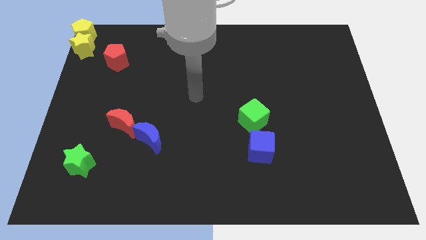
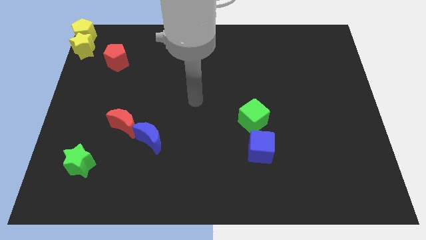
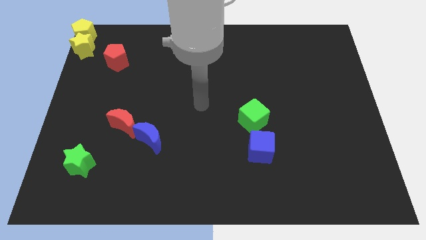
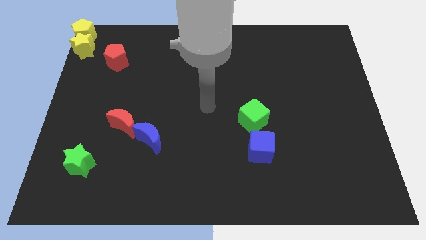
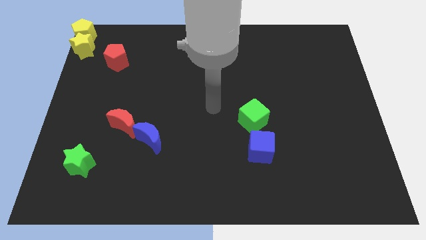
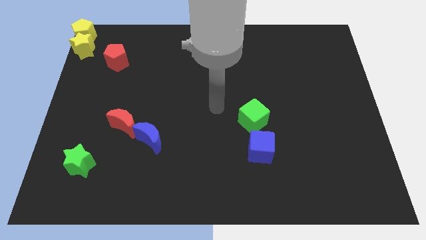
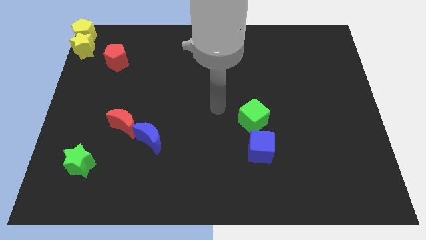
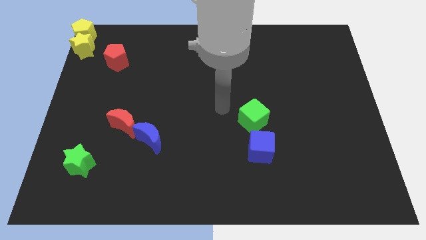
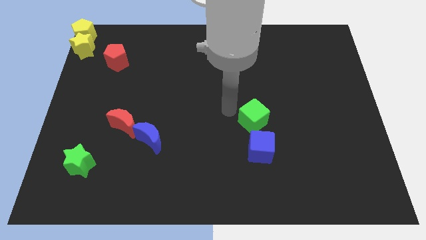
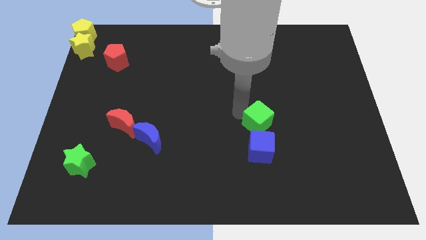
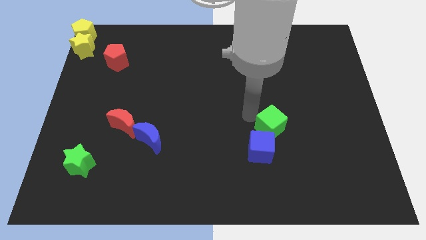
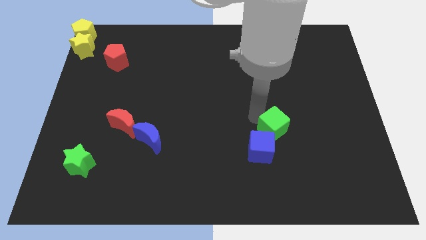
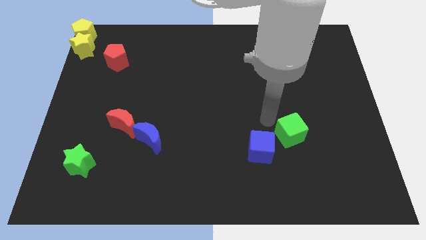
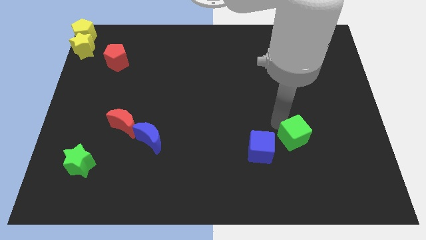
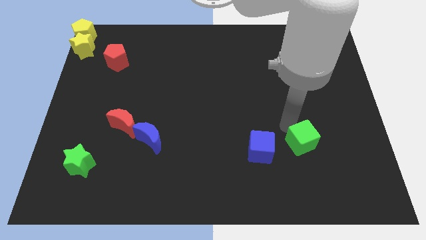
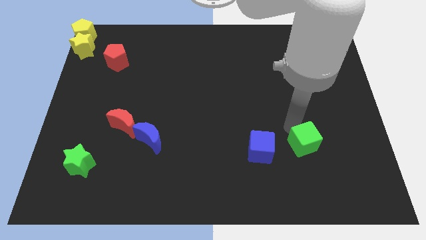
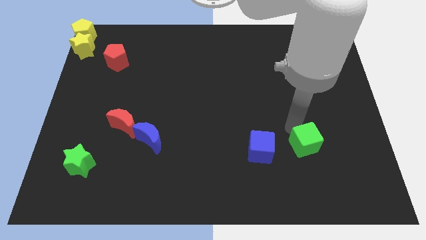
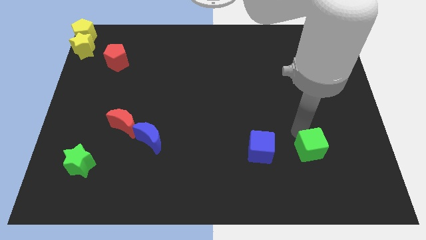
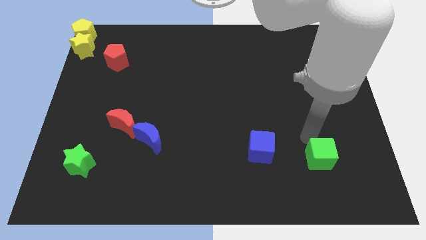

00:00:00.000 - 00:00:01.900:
move the green cube horizontally right to the blue cube

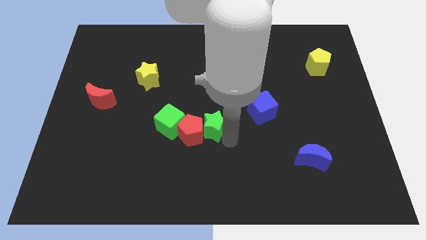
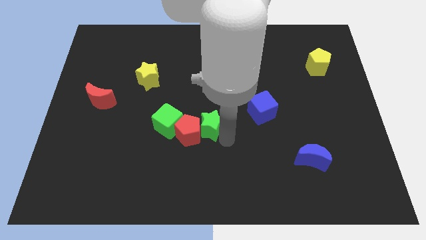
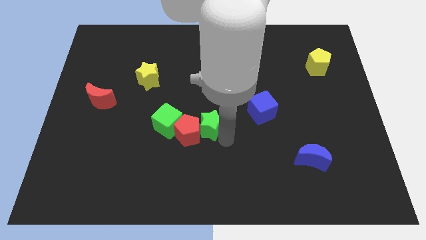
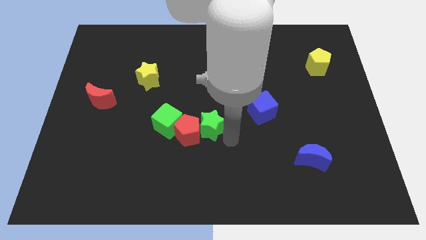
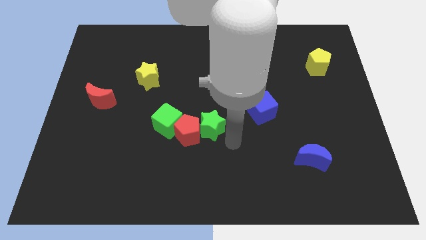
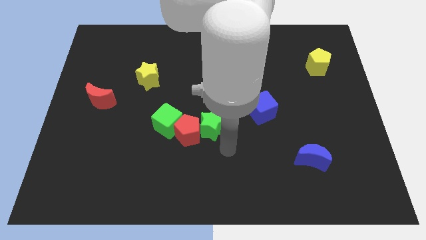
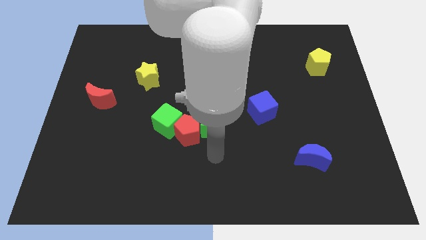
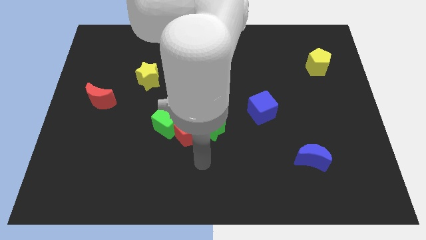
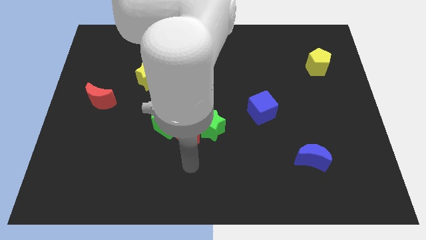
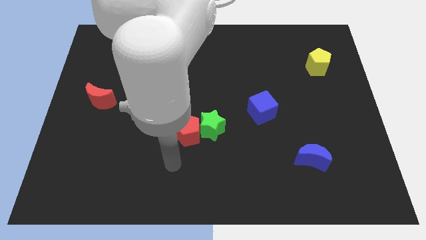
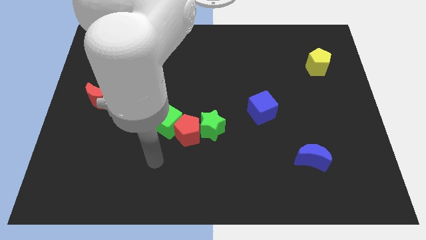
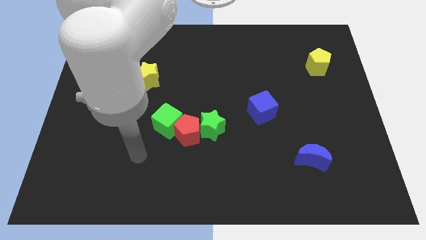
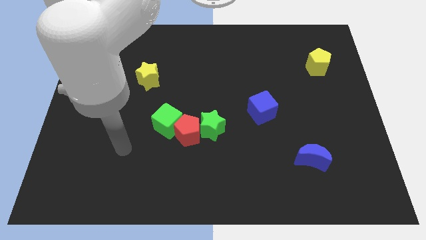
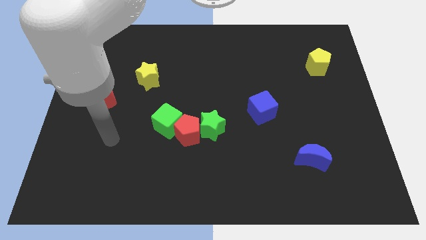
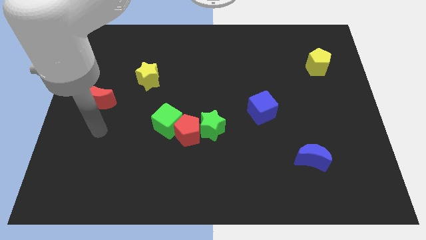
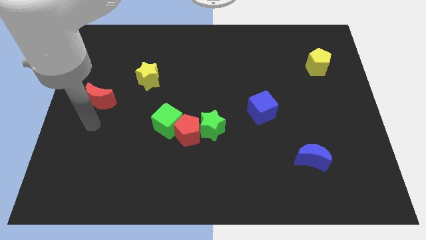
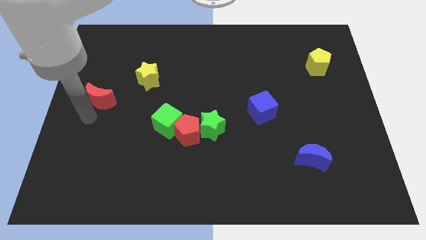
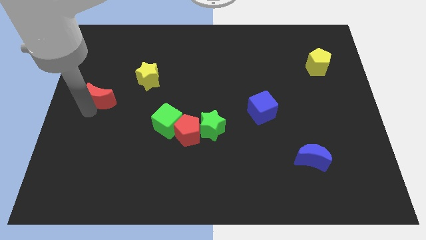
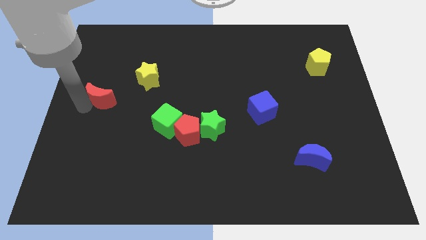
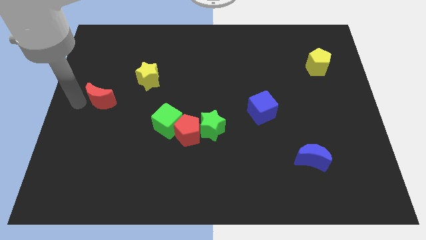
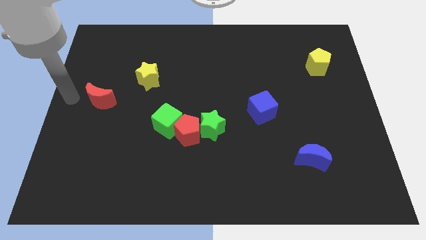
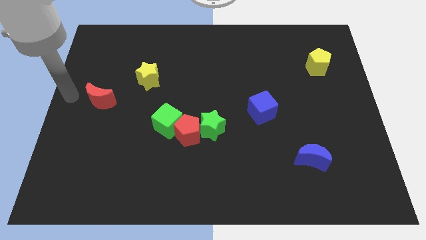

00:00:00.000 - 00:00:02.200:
push the arm to the left of red moon

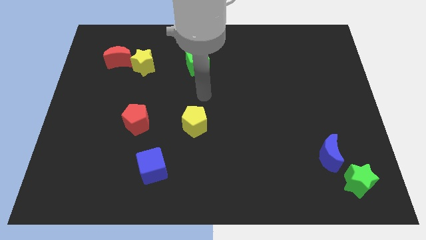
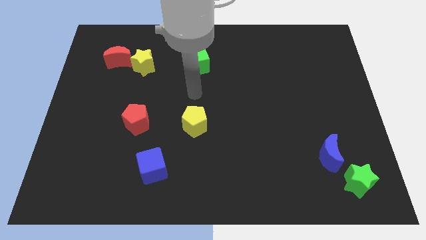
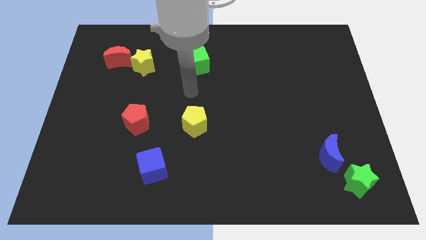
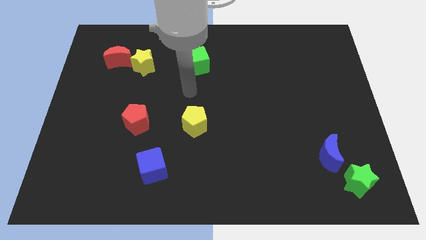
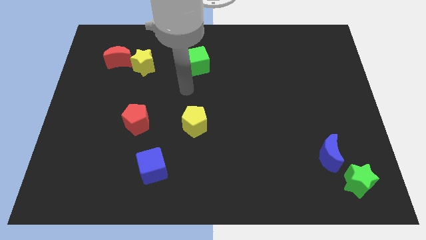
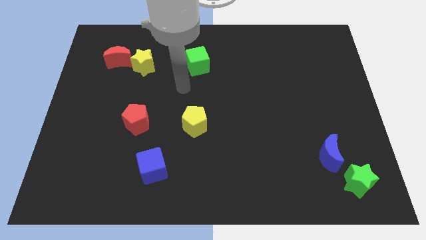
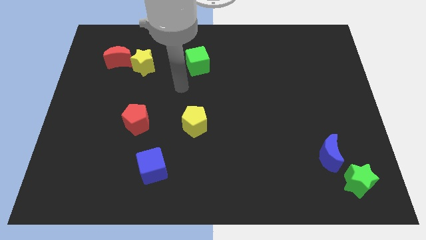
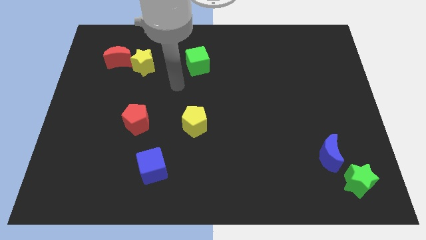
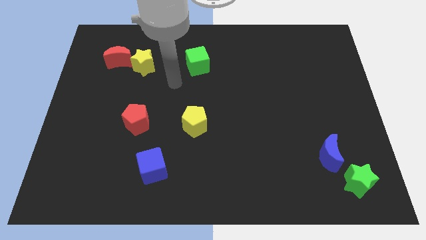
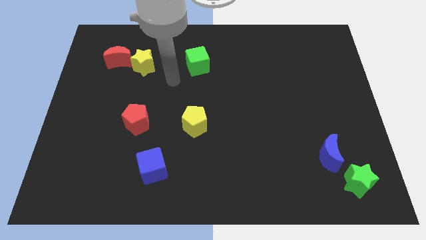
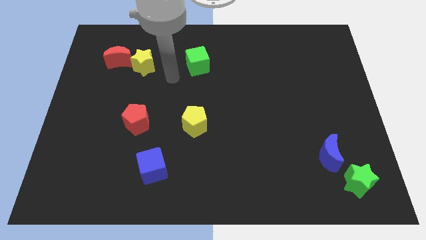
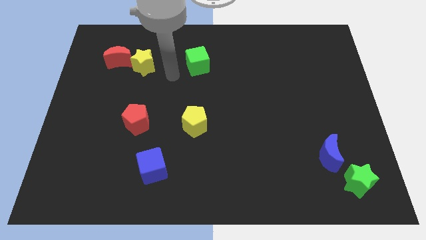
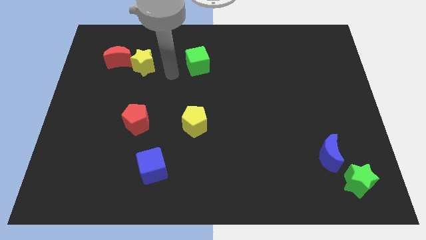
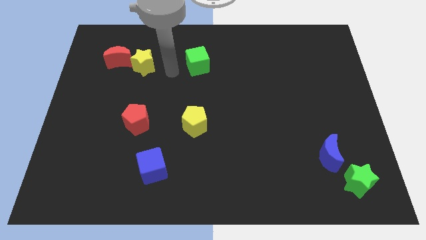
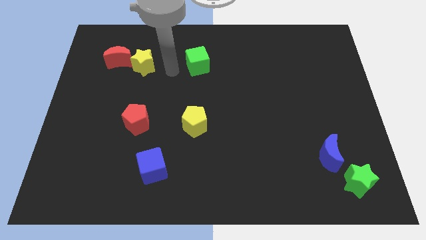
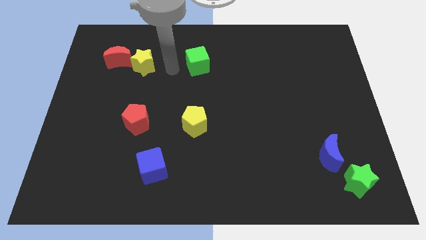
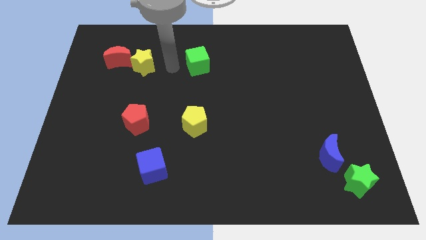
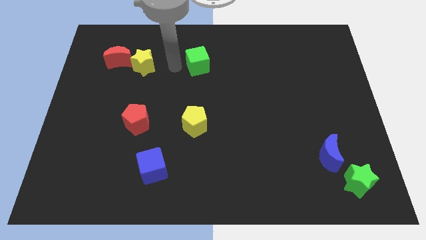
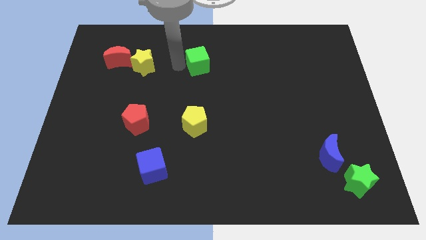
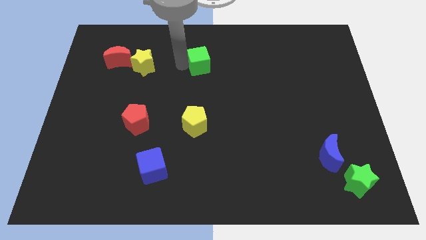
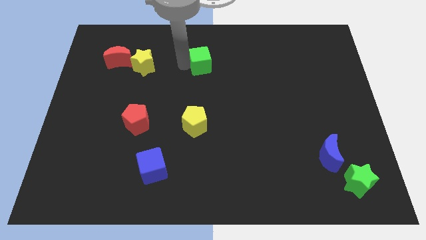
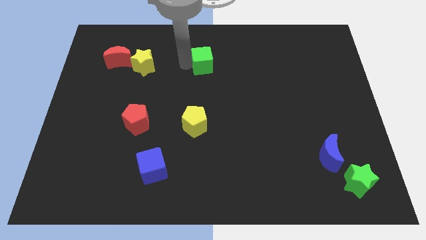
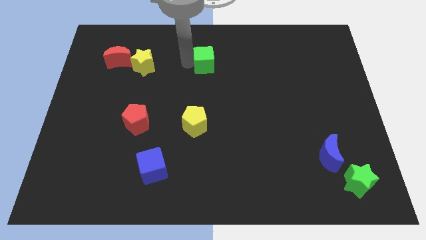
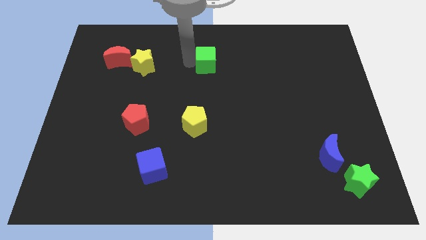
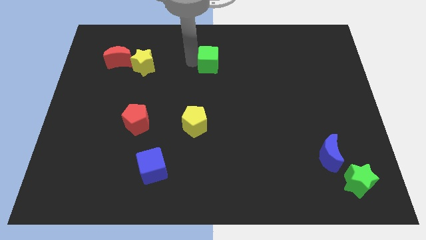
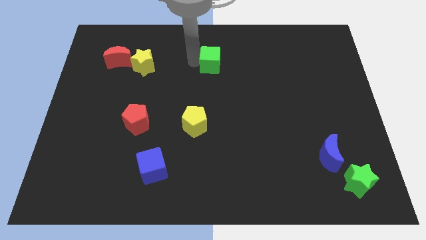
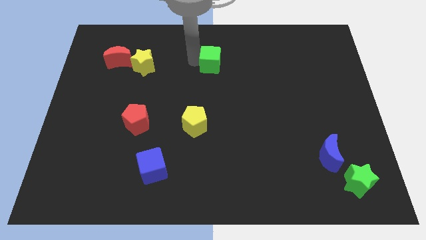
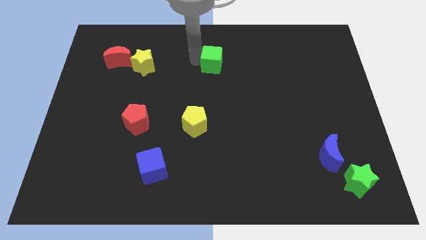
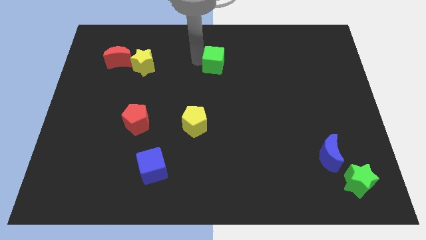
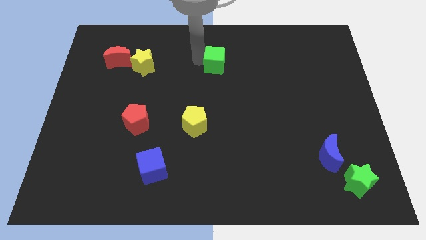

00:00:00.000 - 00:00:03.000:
push the green cube to the right of the board

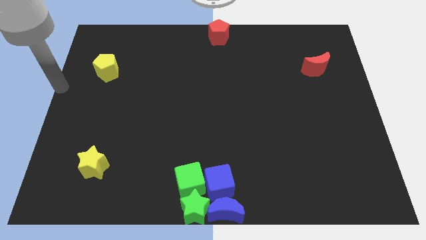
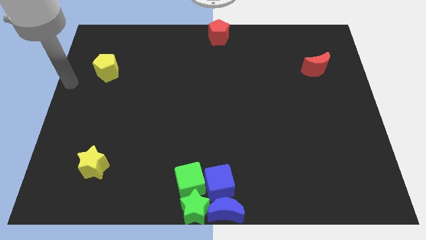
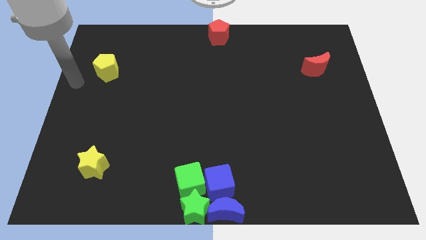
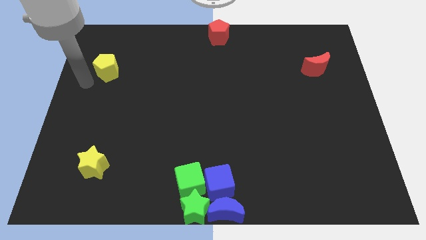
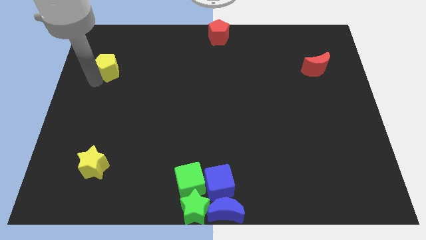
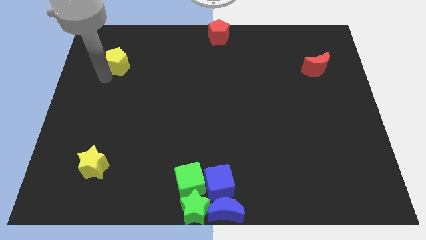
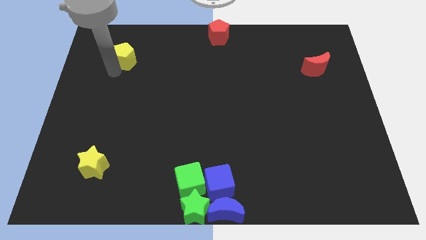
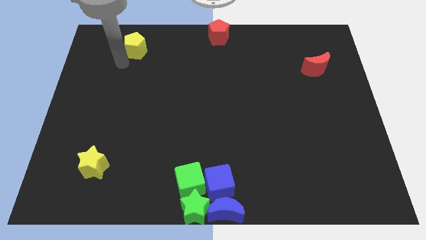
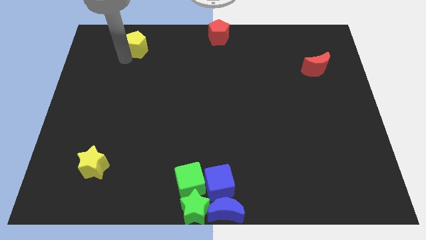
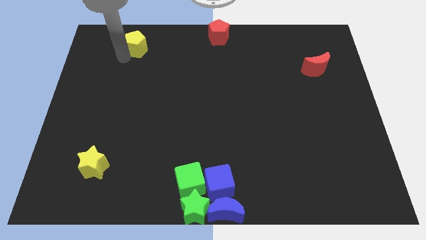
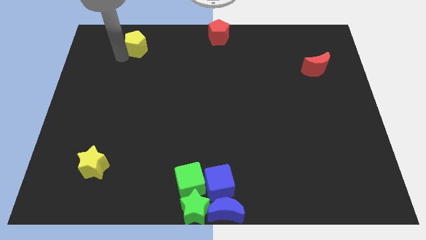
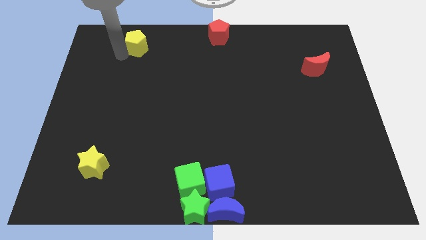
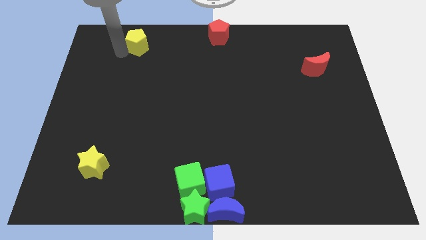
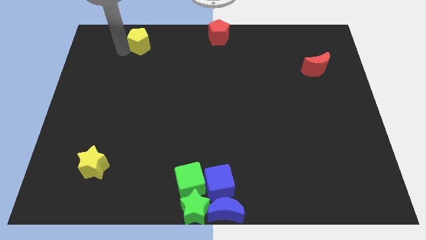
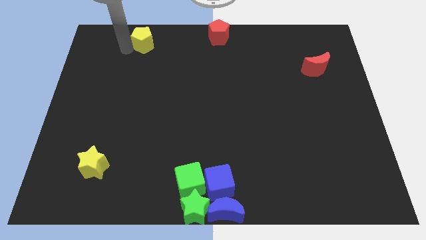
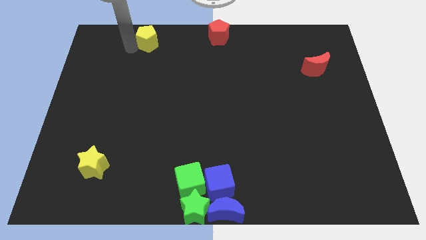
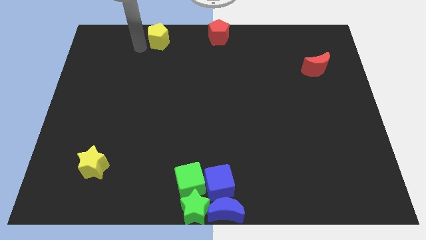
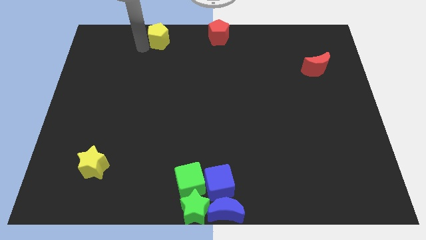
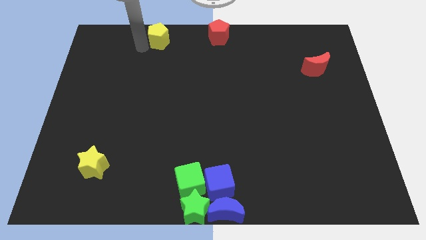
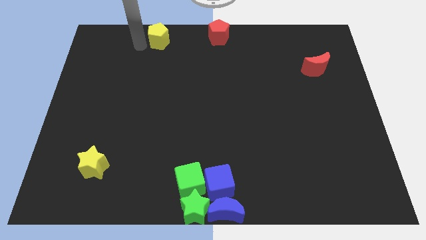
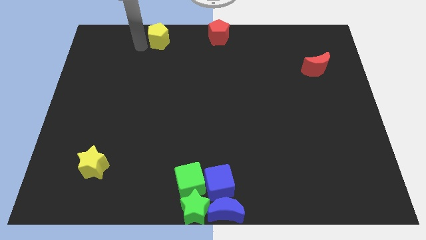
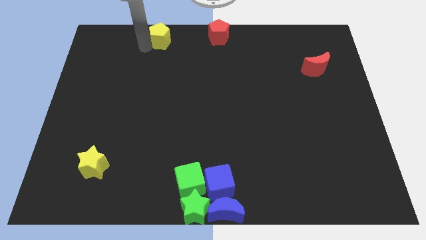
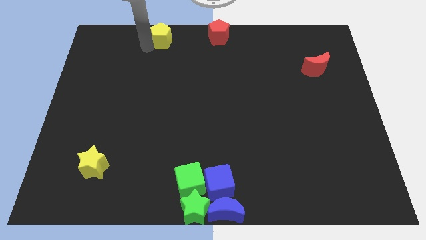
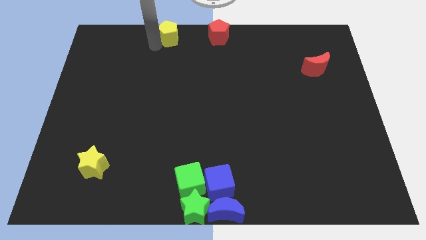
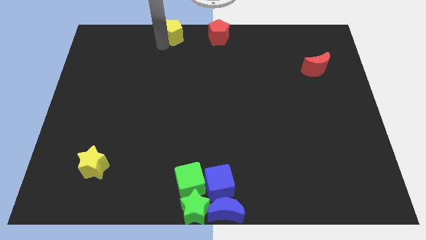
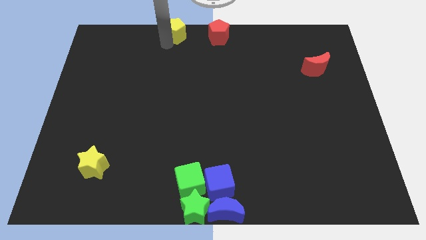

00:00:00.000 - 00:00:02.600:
move the yellow pentagon to the left of red pentagon
